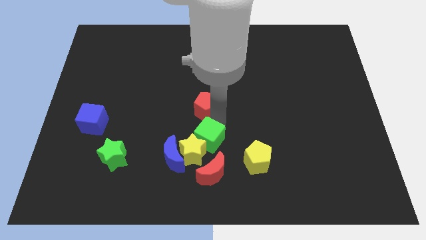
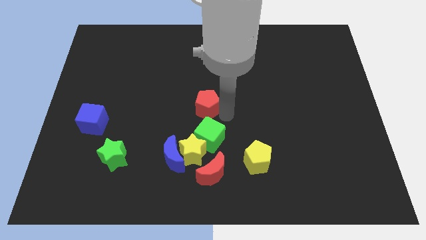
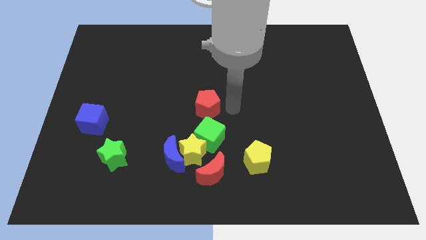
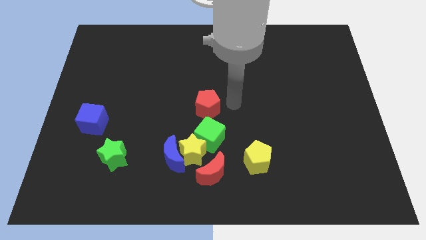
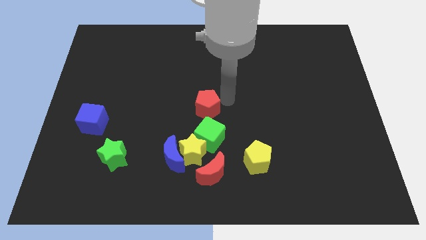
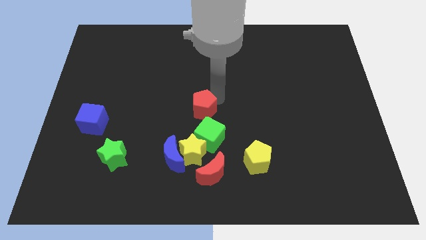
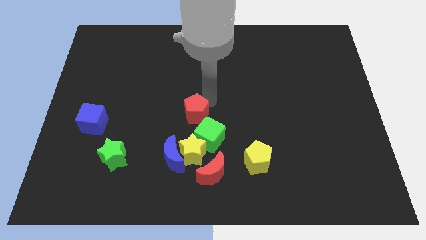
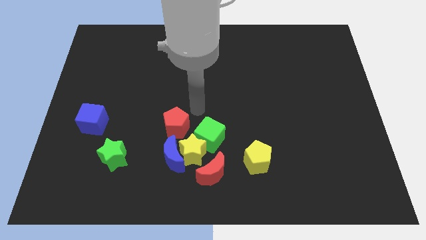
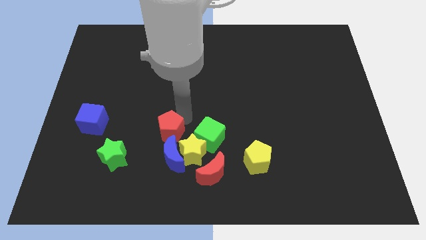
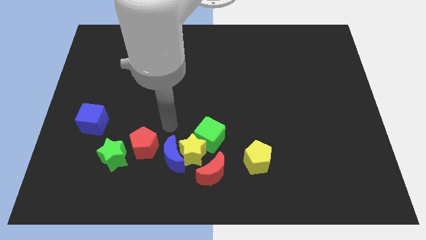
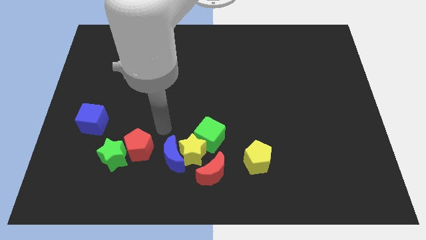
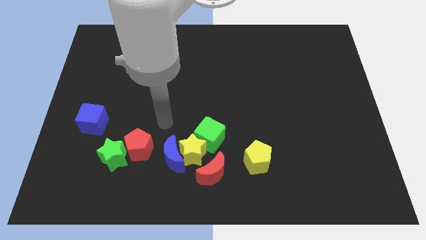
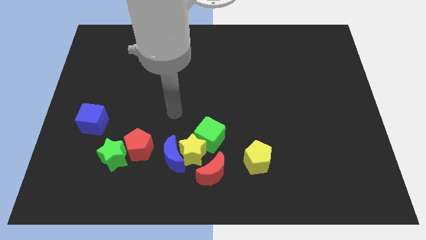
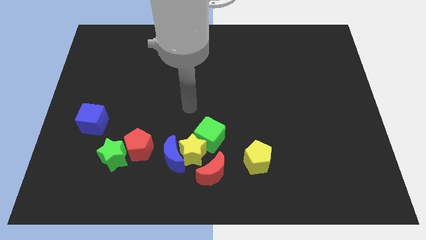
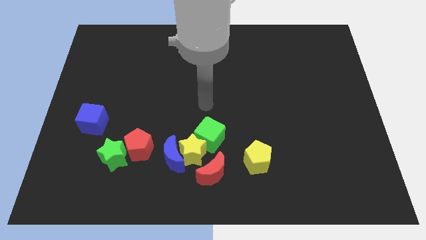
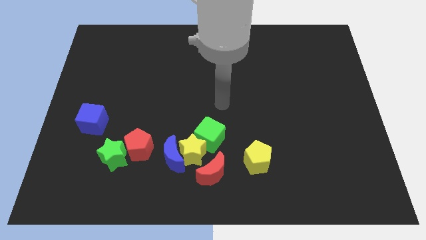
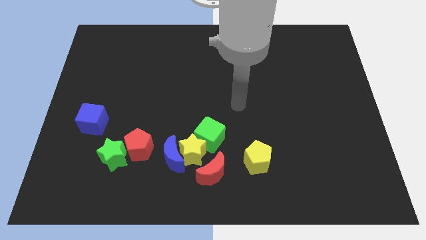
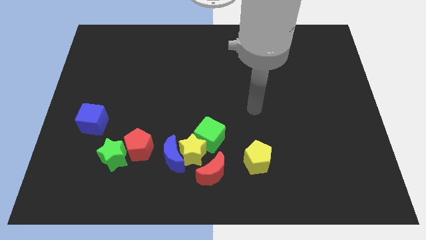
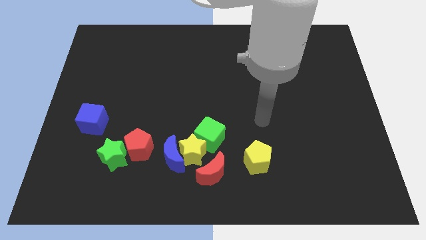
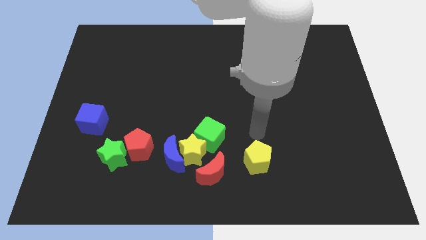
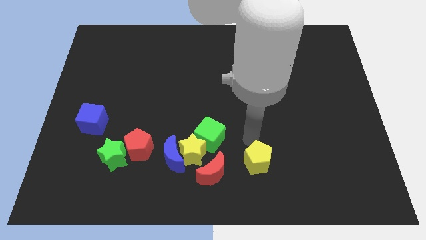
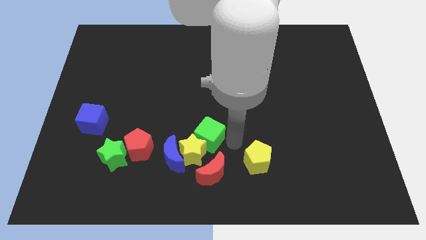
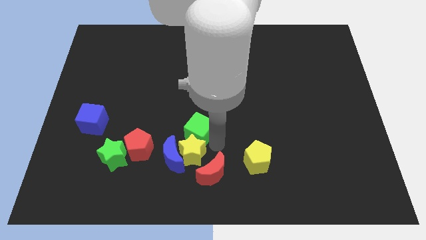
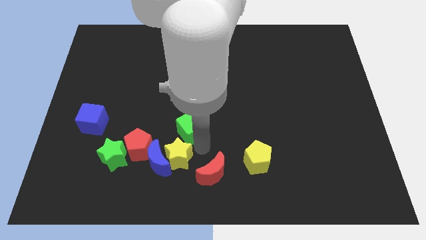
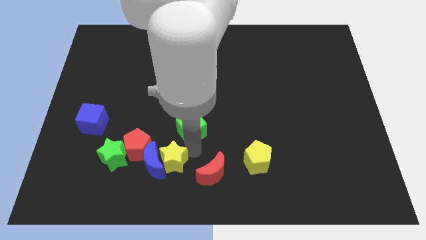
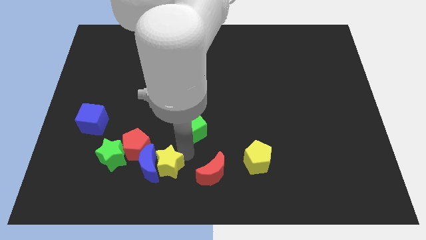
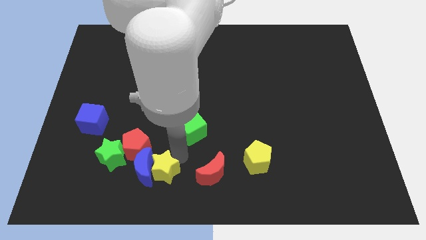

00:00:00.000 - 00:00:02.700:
push the red pentagon yellow star and blue moon towards the bottom left corner of the board

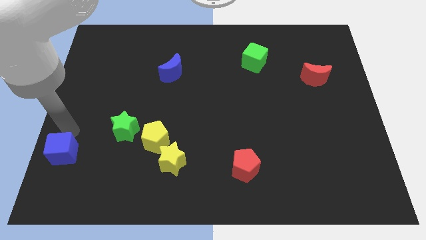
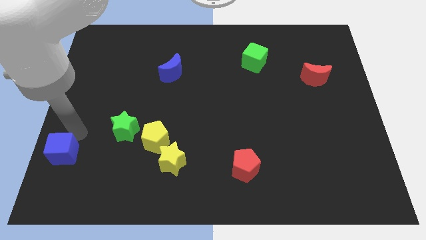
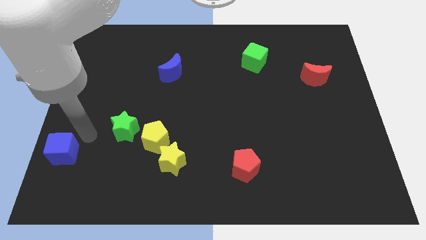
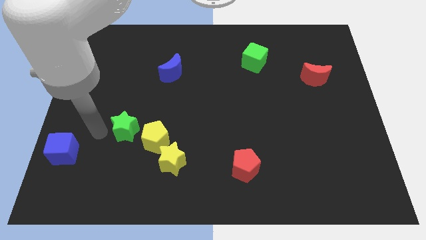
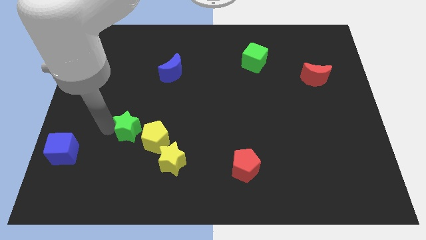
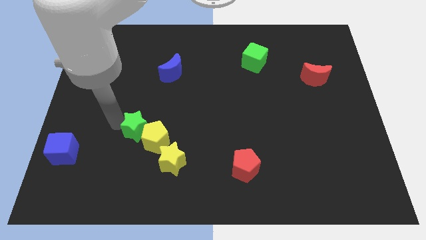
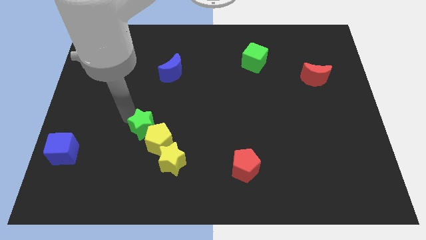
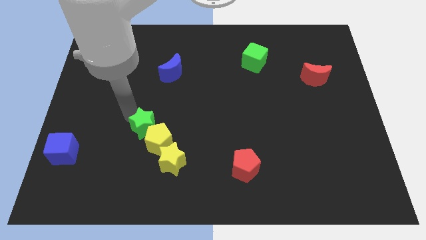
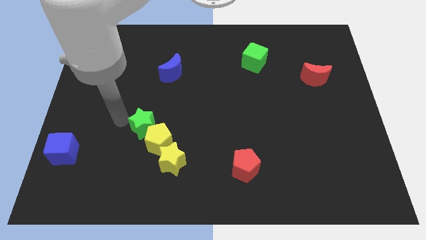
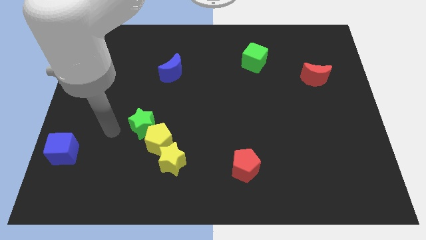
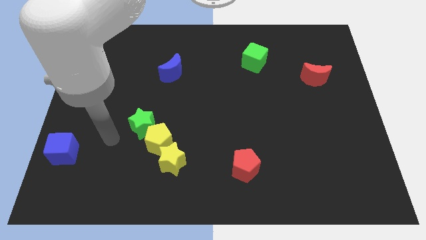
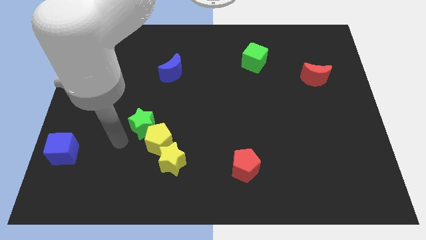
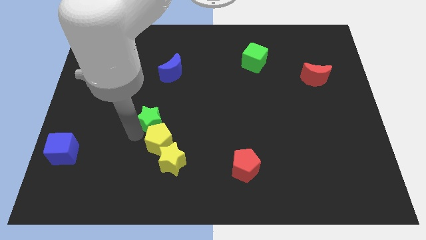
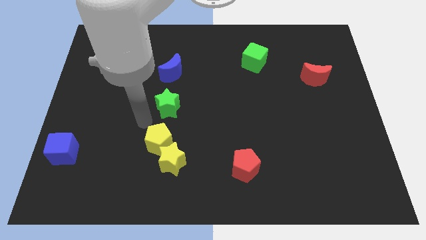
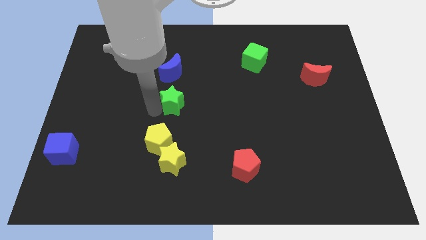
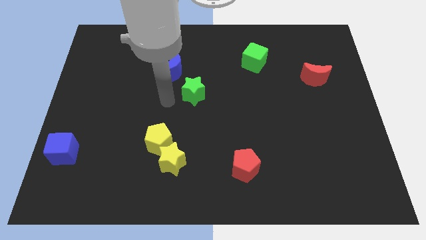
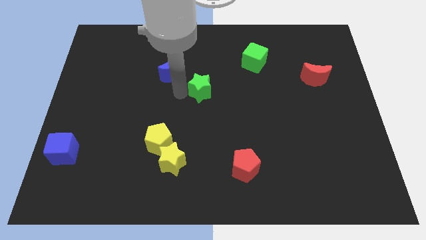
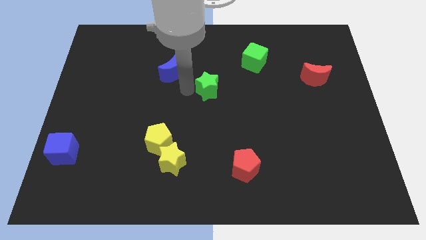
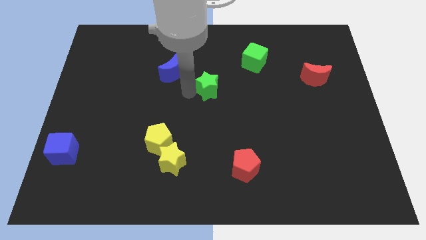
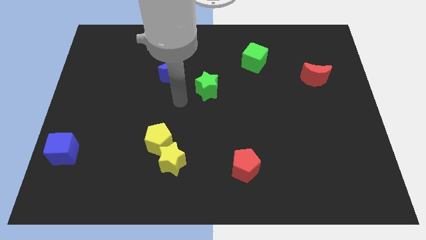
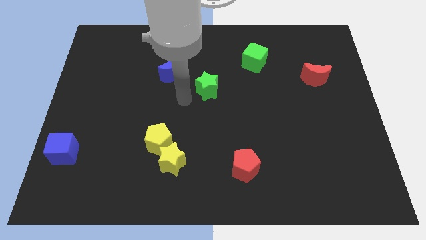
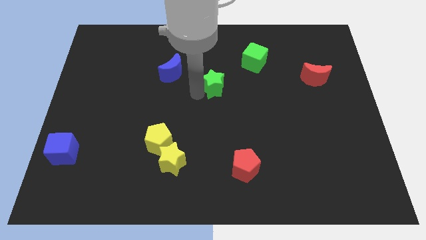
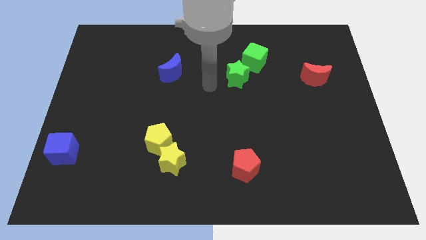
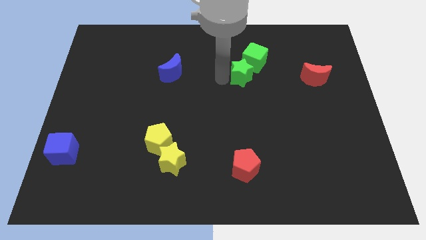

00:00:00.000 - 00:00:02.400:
place the green star below the green cube

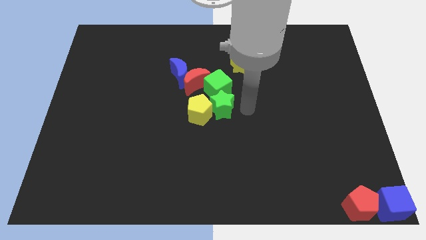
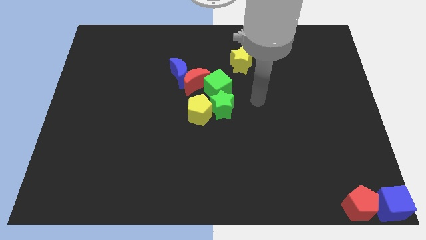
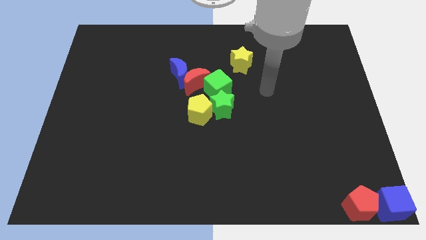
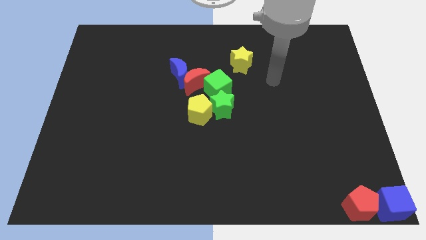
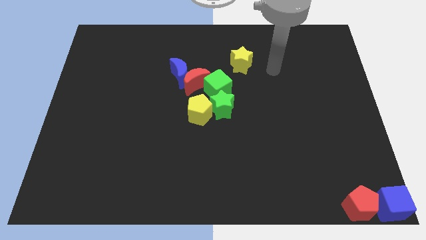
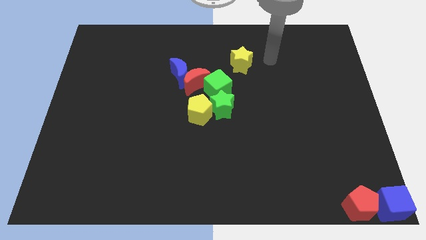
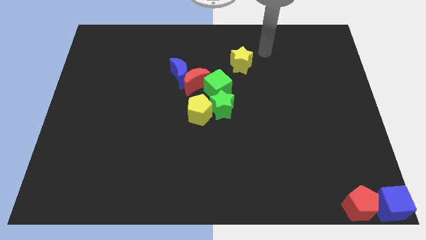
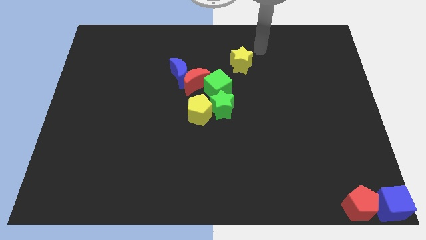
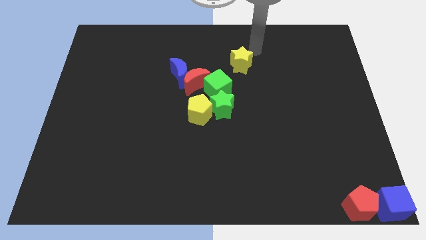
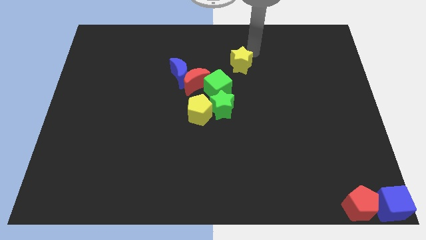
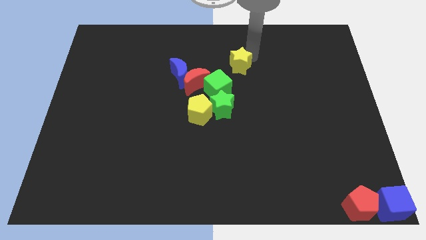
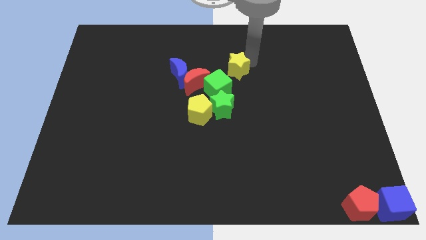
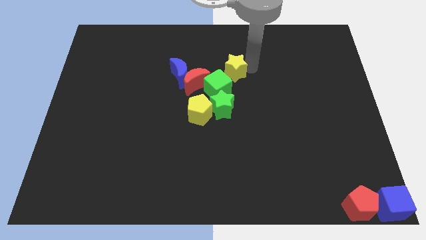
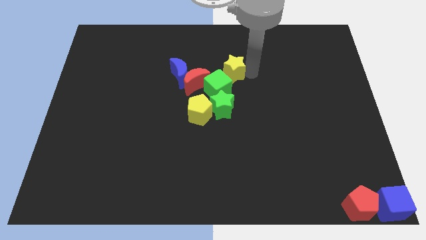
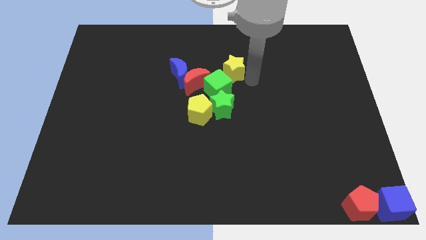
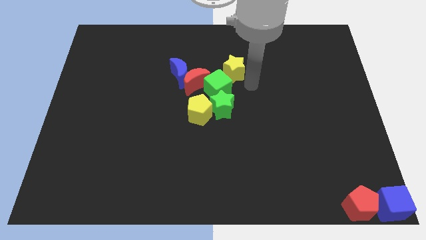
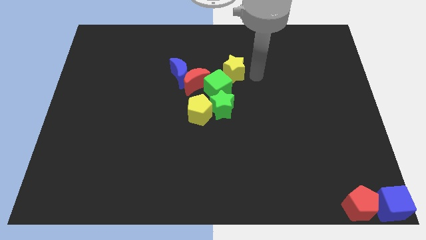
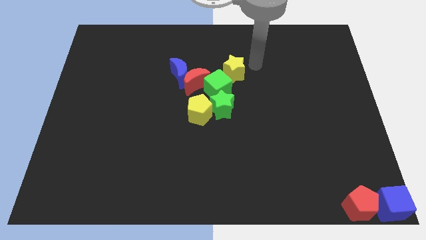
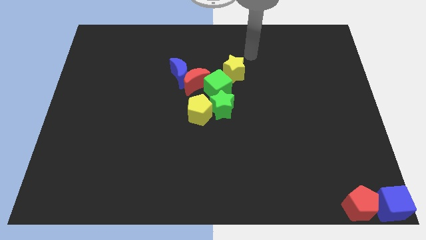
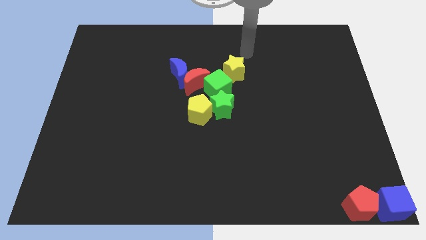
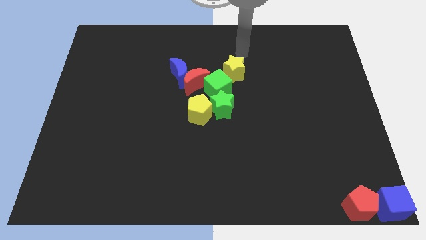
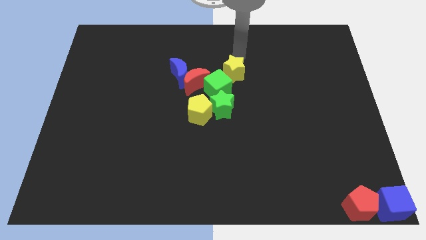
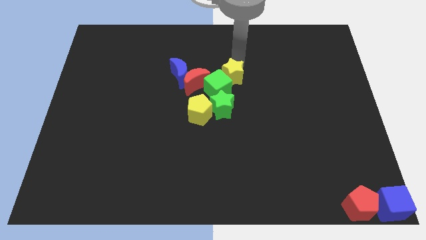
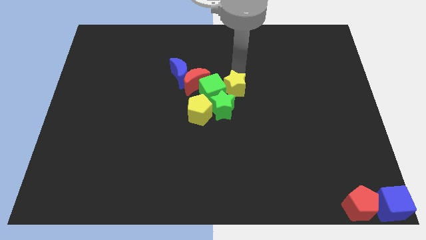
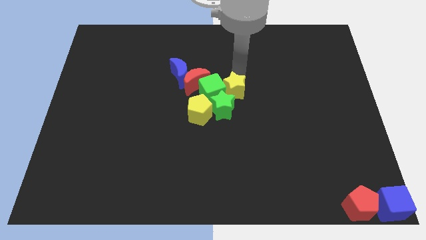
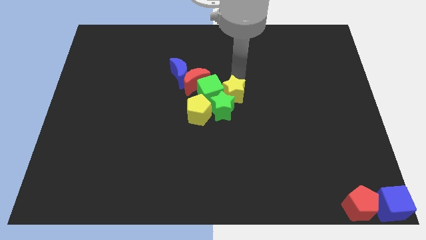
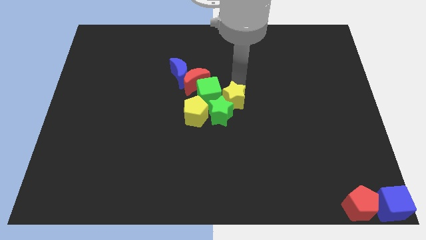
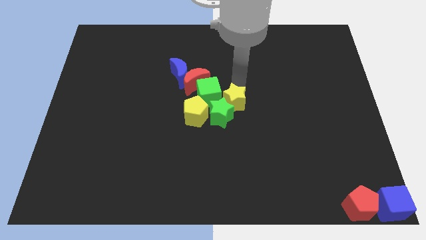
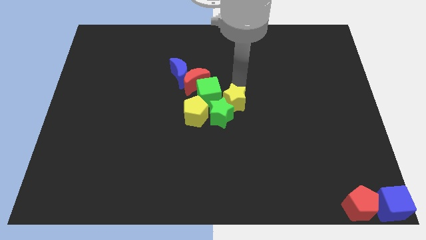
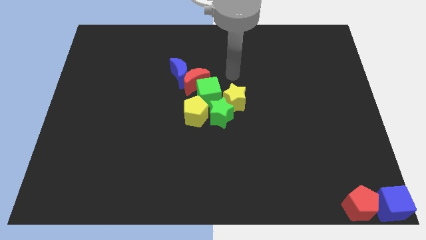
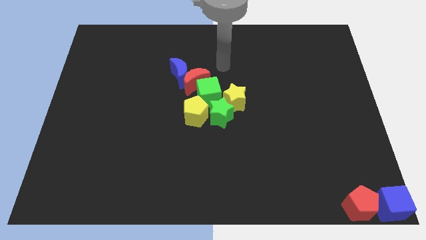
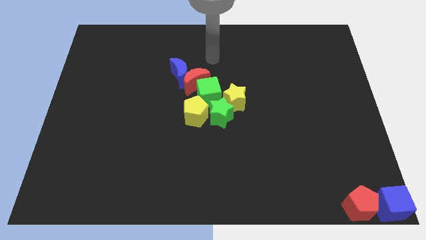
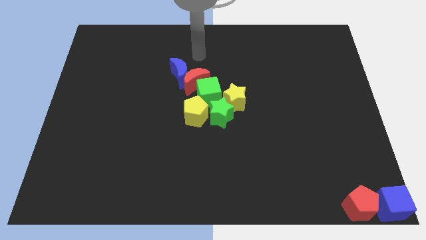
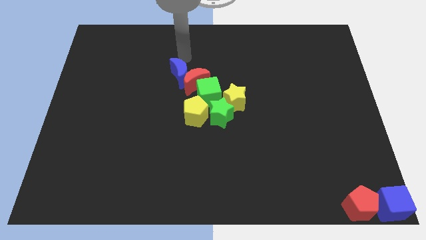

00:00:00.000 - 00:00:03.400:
push the yellow star into the group of blocks

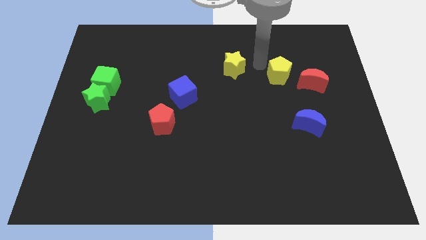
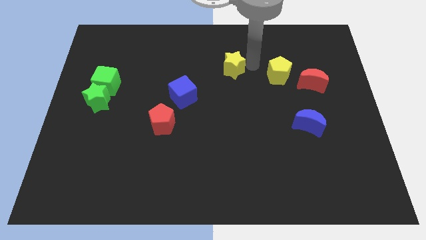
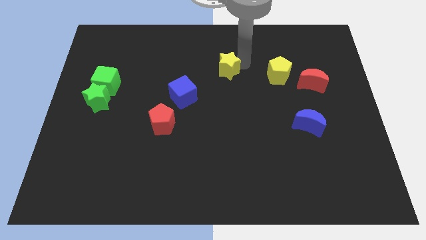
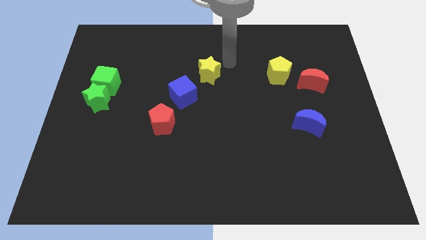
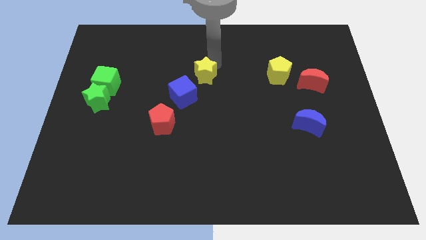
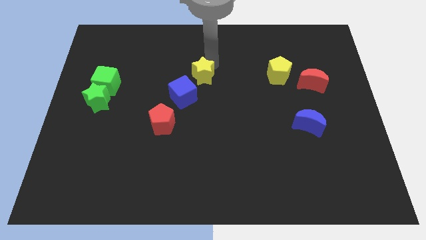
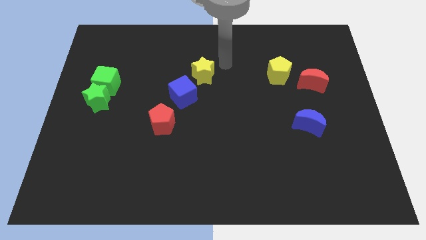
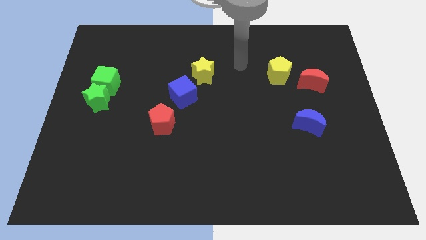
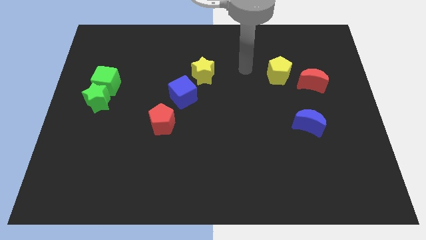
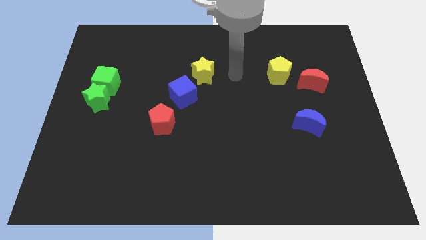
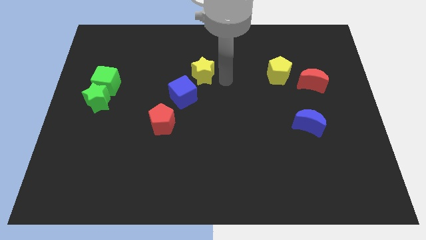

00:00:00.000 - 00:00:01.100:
drag the yellow star towards the blue cube
